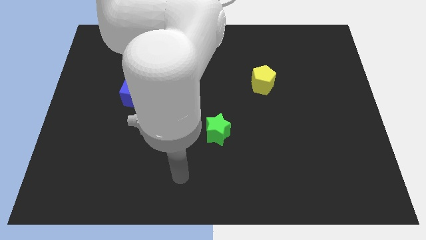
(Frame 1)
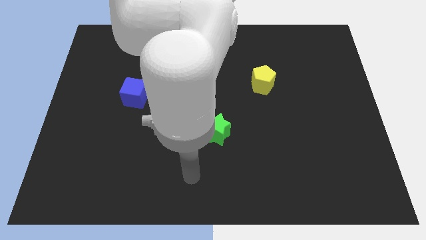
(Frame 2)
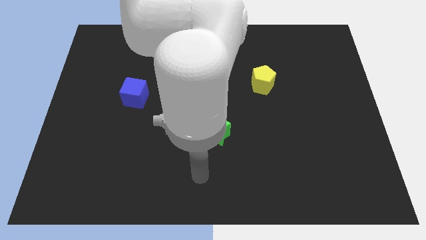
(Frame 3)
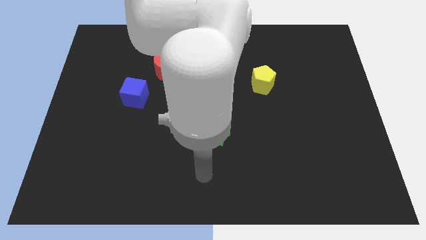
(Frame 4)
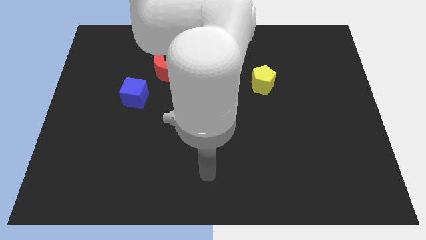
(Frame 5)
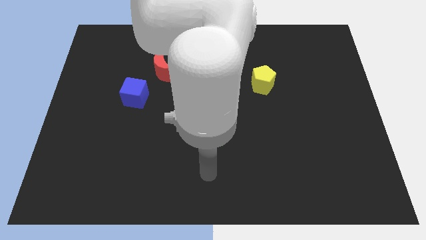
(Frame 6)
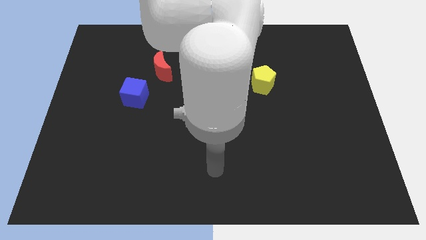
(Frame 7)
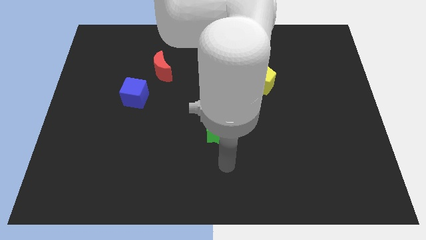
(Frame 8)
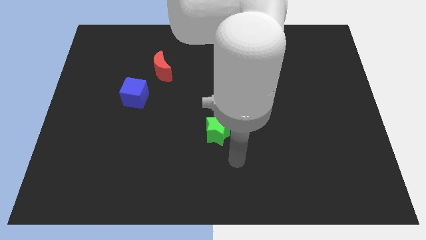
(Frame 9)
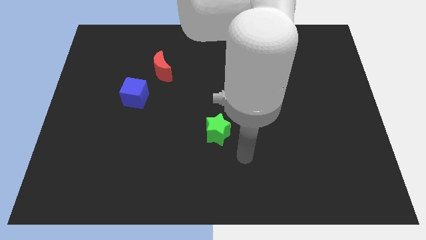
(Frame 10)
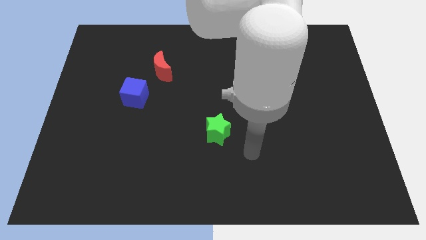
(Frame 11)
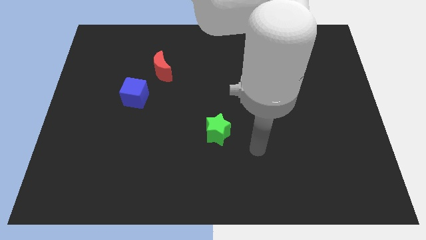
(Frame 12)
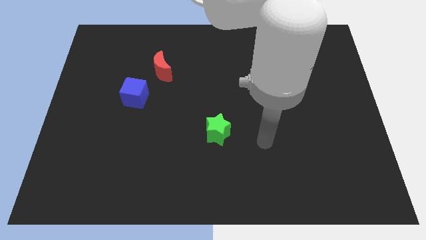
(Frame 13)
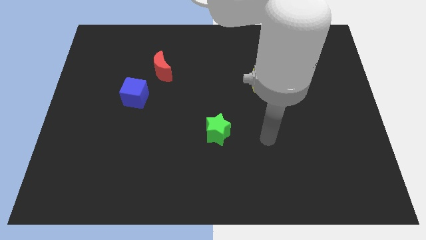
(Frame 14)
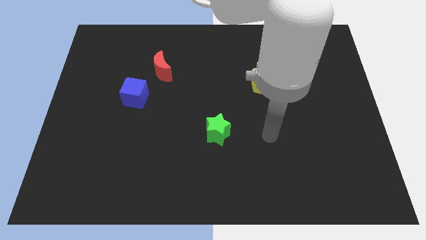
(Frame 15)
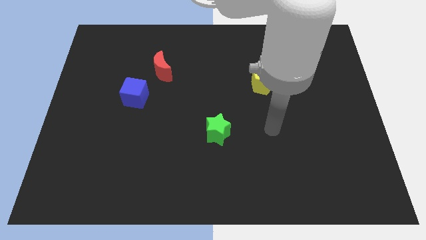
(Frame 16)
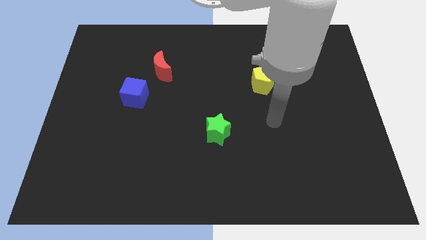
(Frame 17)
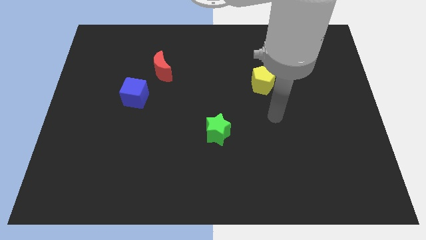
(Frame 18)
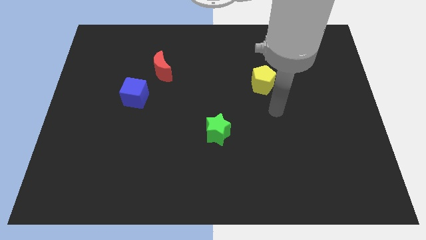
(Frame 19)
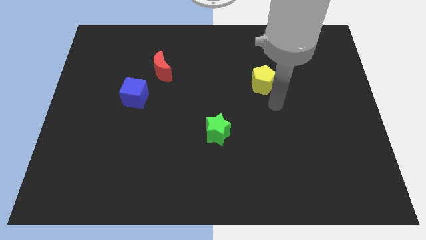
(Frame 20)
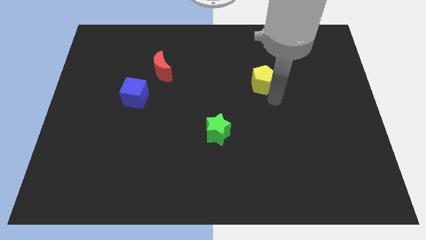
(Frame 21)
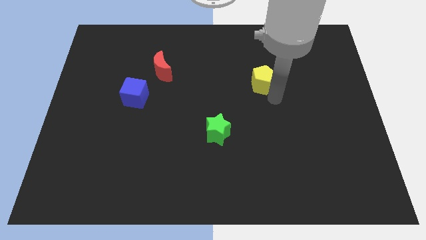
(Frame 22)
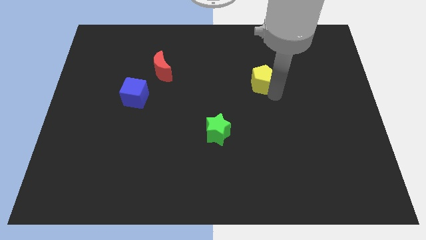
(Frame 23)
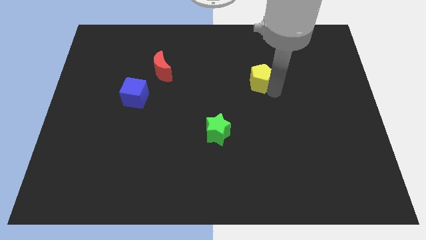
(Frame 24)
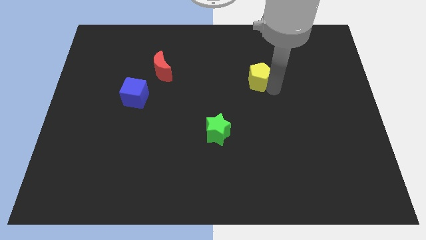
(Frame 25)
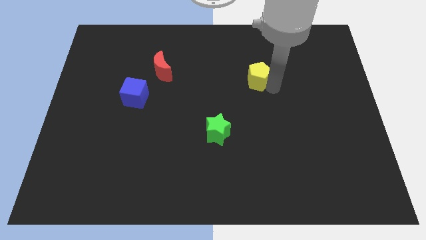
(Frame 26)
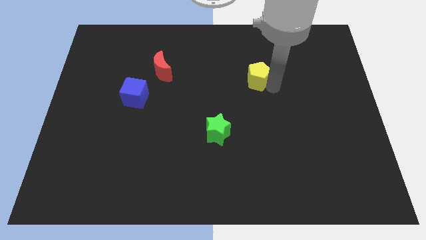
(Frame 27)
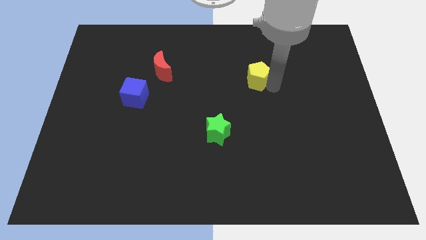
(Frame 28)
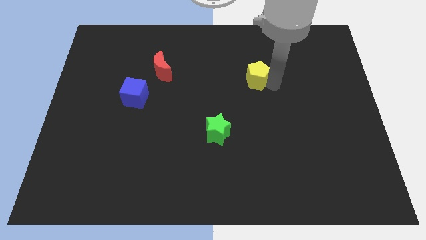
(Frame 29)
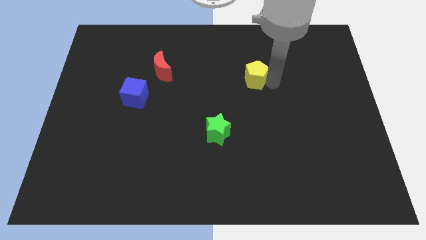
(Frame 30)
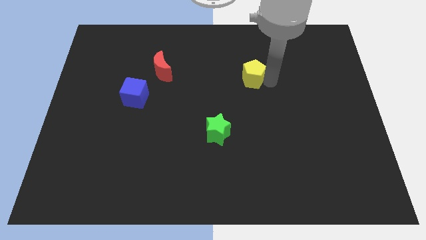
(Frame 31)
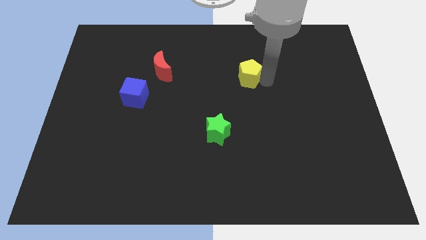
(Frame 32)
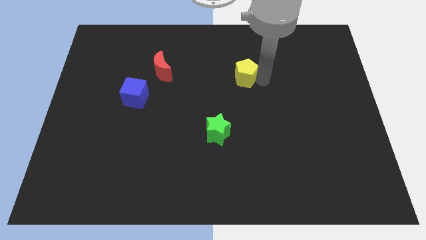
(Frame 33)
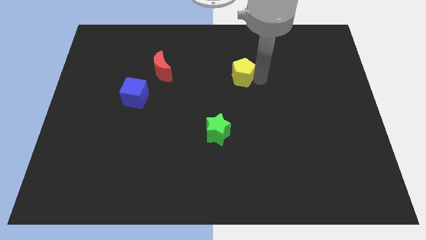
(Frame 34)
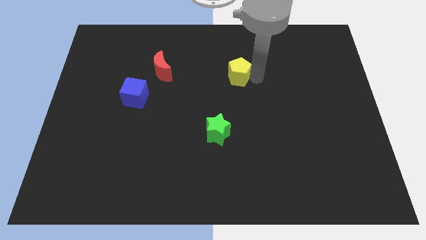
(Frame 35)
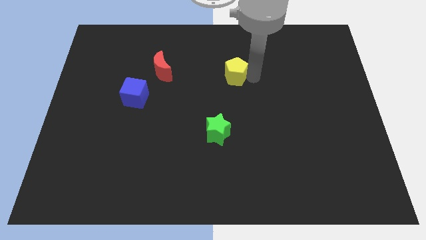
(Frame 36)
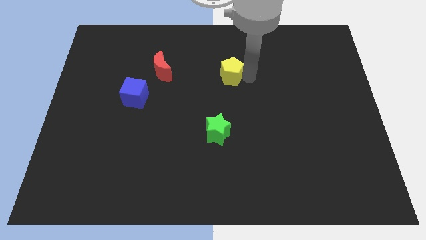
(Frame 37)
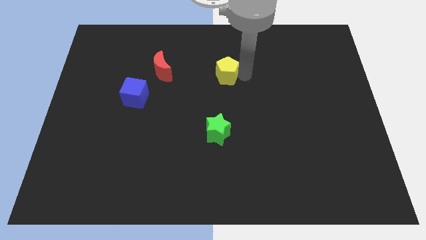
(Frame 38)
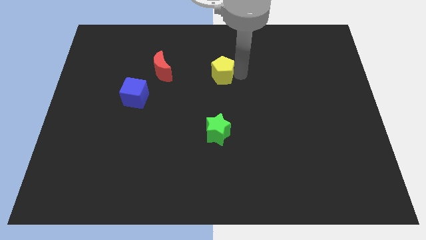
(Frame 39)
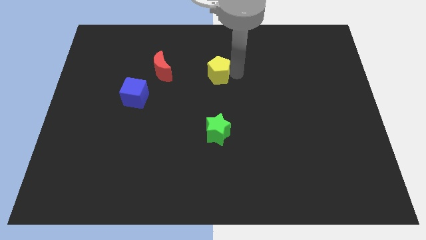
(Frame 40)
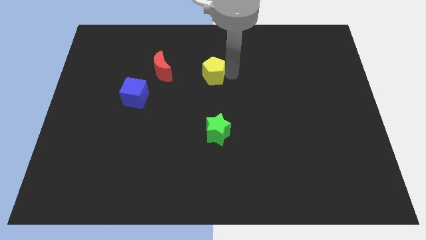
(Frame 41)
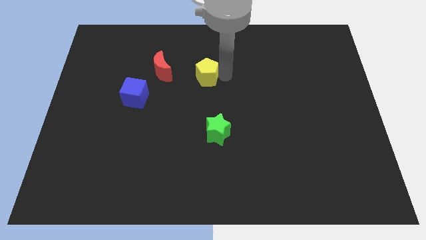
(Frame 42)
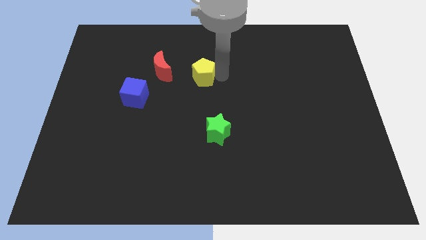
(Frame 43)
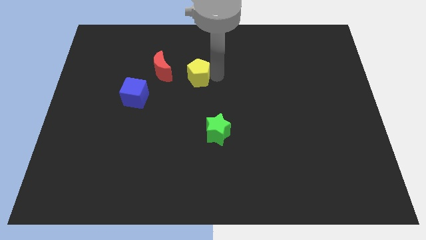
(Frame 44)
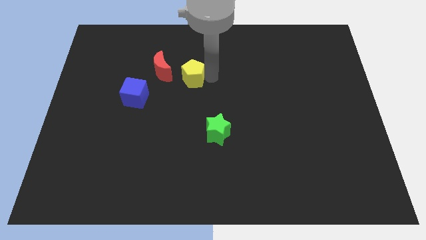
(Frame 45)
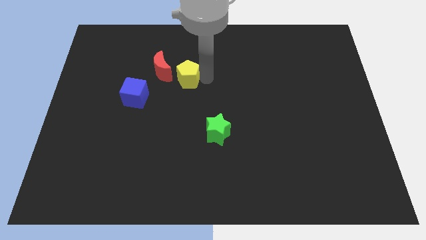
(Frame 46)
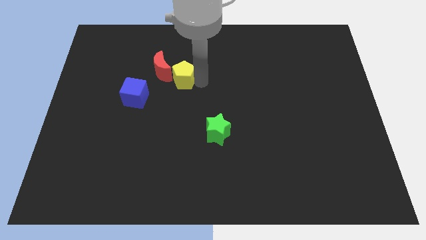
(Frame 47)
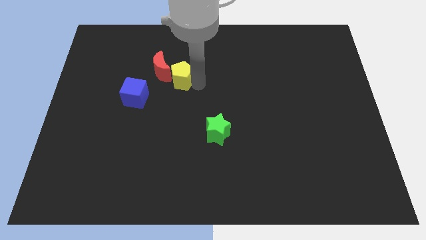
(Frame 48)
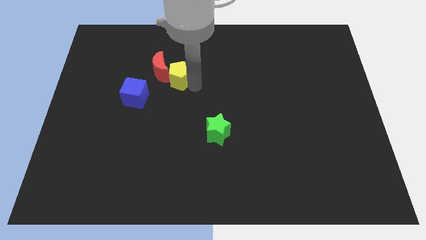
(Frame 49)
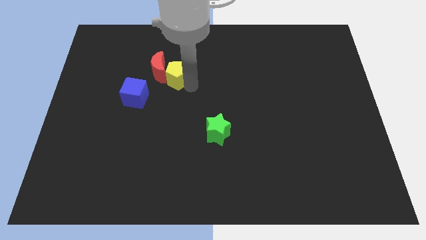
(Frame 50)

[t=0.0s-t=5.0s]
put the yellow block to the red block

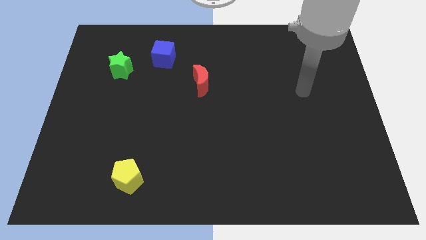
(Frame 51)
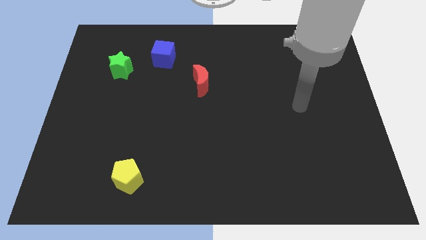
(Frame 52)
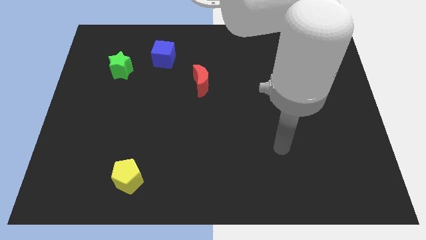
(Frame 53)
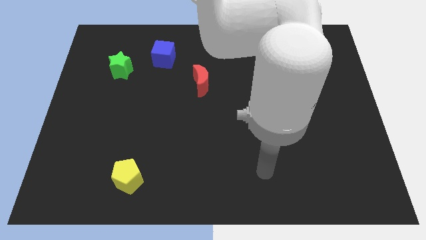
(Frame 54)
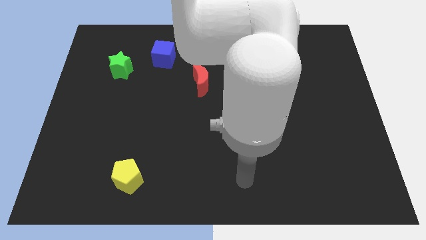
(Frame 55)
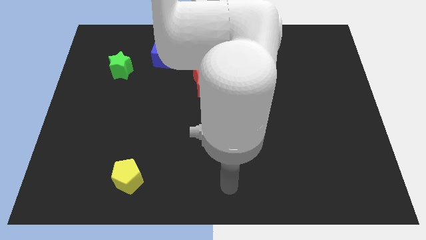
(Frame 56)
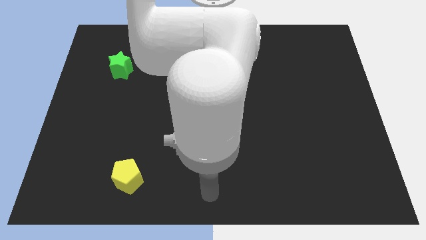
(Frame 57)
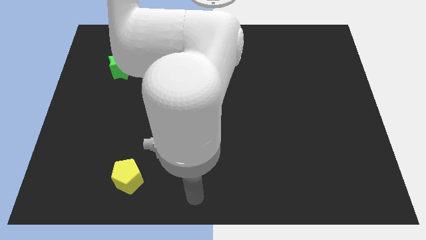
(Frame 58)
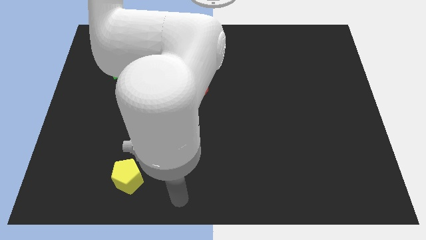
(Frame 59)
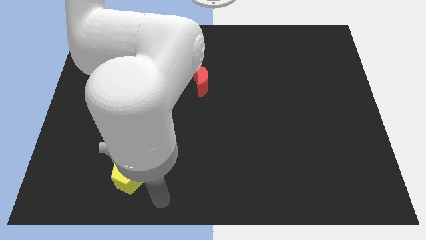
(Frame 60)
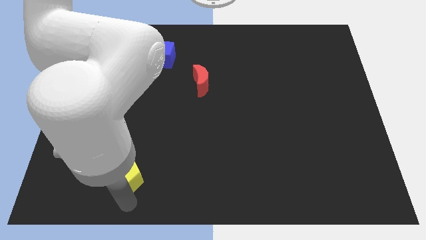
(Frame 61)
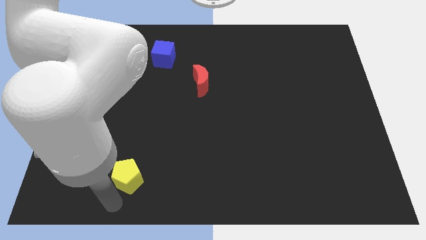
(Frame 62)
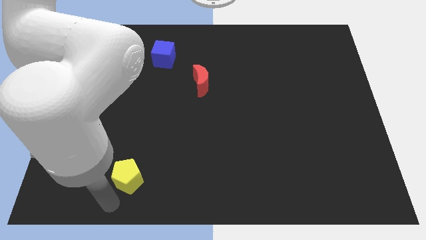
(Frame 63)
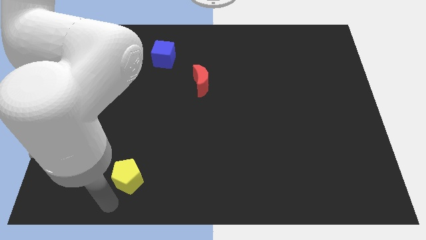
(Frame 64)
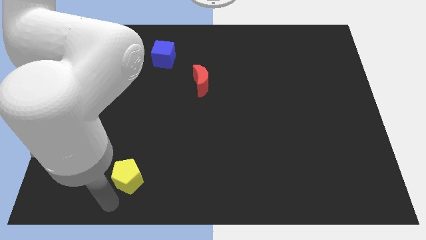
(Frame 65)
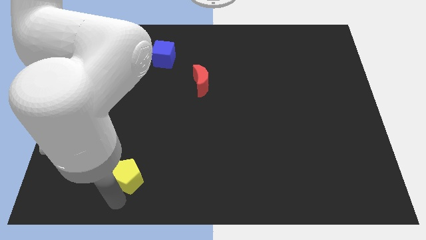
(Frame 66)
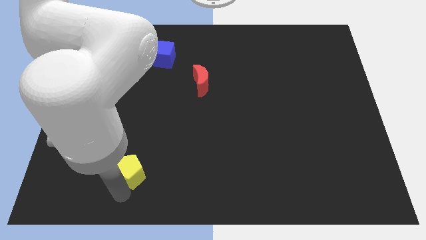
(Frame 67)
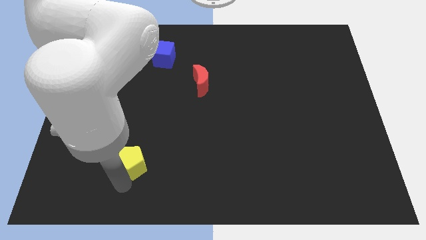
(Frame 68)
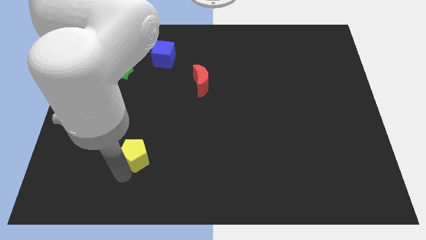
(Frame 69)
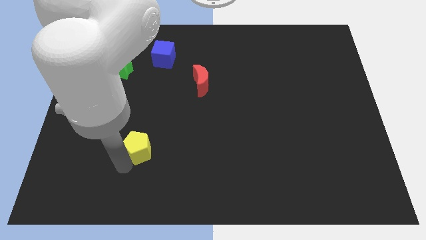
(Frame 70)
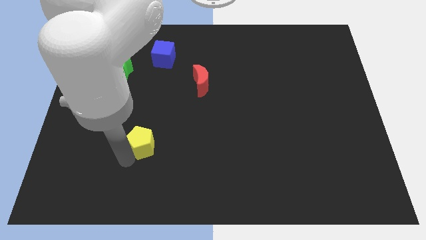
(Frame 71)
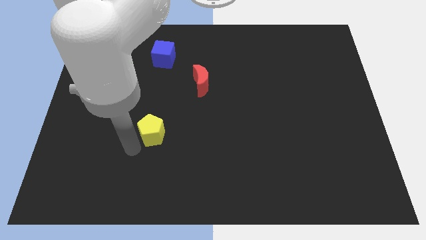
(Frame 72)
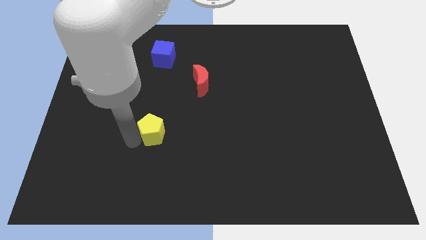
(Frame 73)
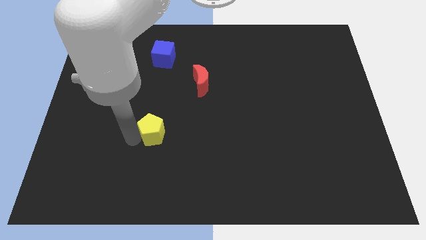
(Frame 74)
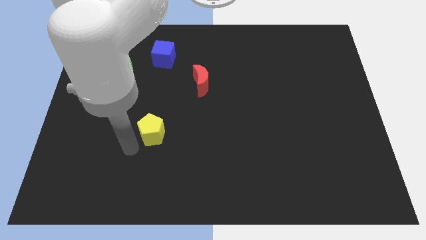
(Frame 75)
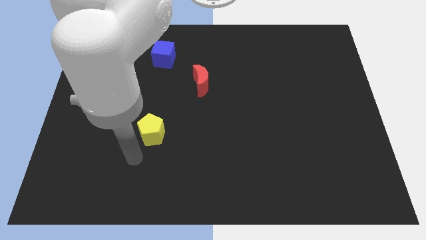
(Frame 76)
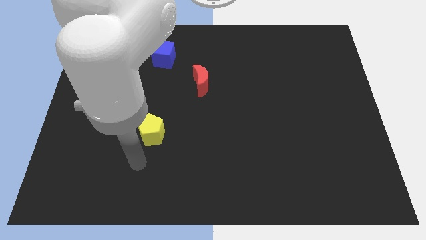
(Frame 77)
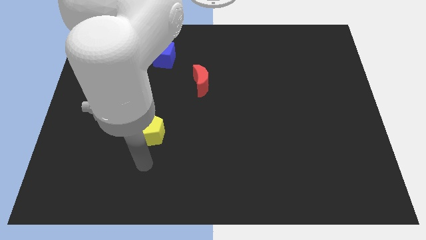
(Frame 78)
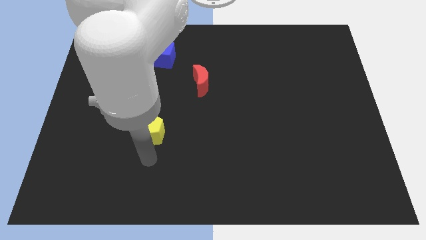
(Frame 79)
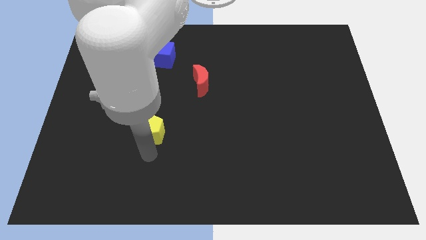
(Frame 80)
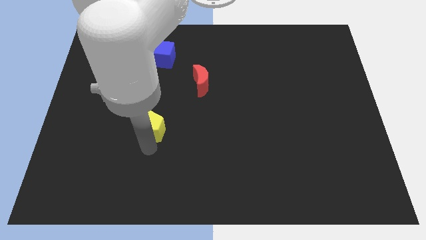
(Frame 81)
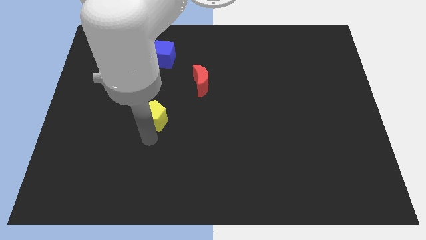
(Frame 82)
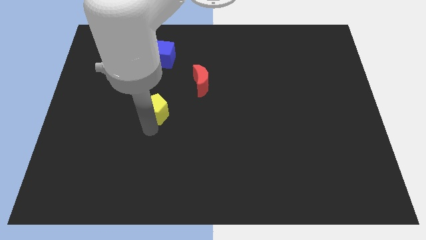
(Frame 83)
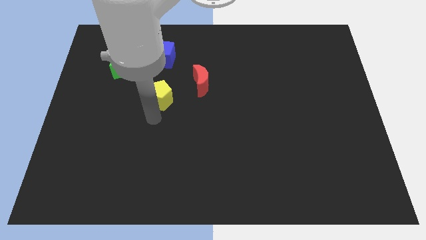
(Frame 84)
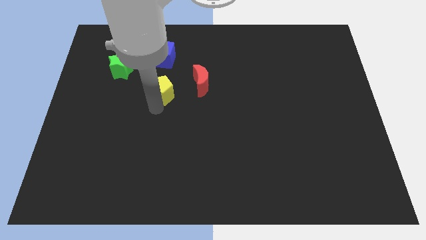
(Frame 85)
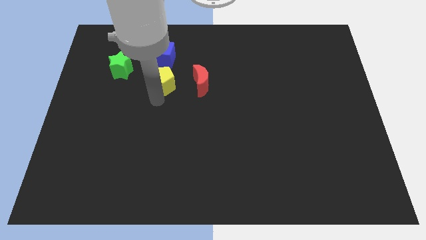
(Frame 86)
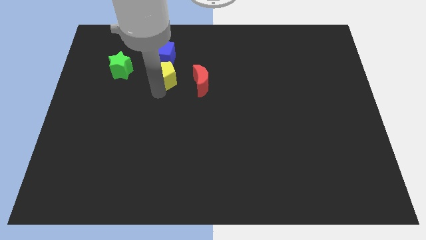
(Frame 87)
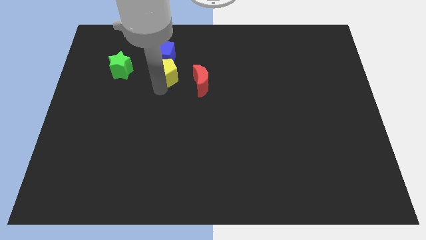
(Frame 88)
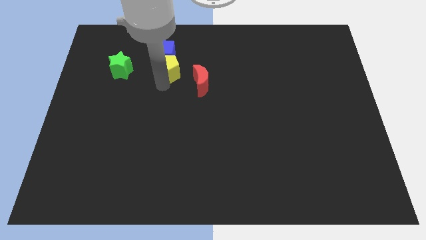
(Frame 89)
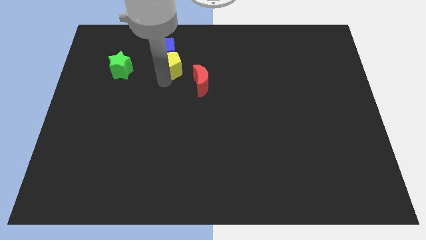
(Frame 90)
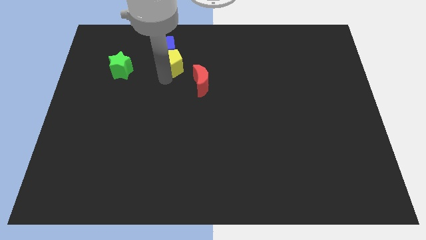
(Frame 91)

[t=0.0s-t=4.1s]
put the pentagon towards the blue cube
